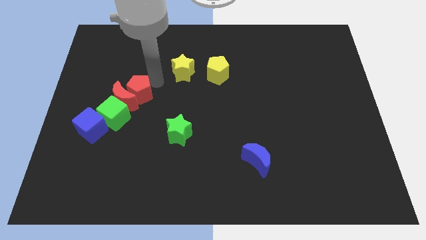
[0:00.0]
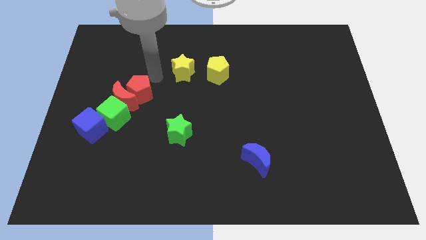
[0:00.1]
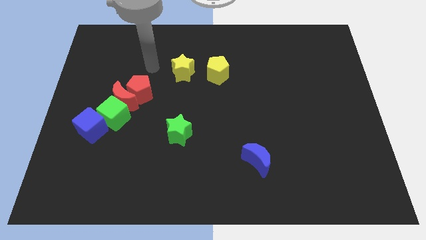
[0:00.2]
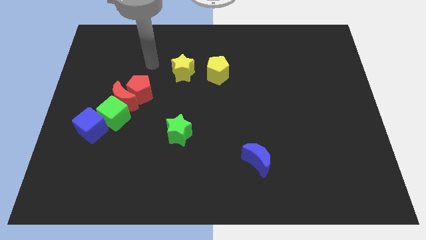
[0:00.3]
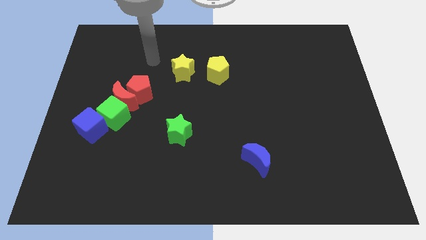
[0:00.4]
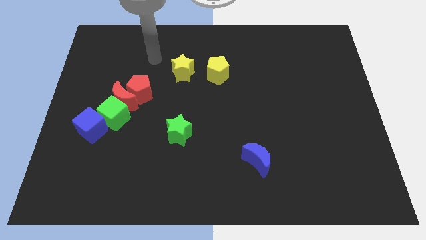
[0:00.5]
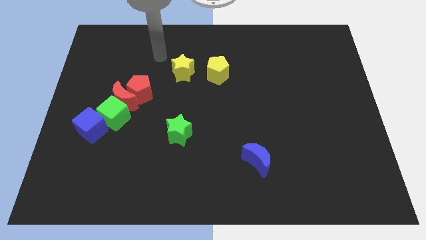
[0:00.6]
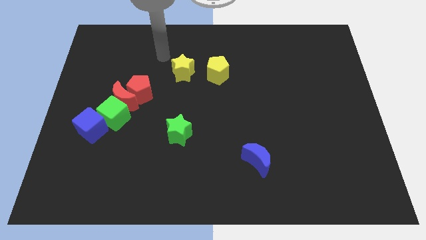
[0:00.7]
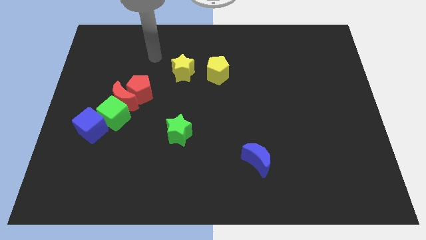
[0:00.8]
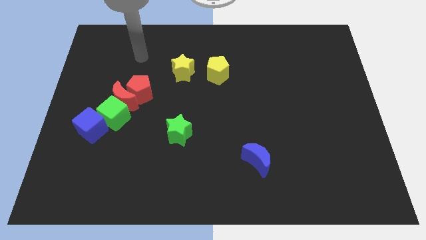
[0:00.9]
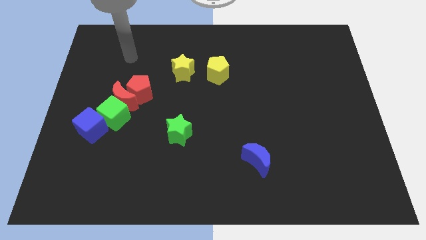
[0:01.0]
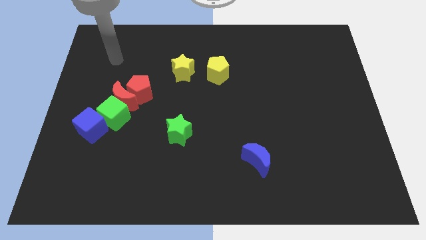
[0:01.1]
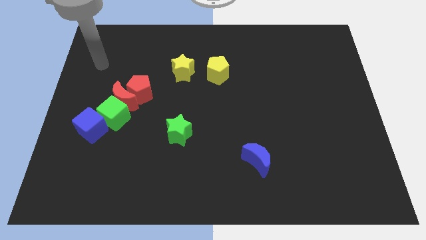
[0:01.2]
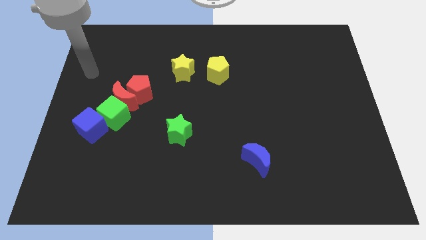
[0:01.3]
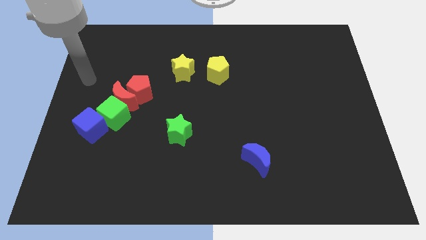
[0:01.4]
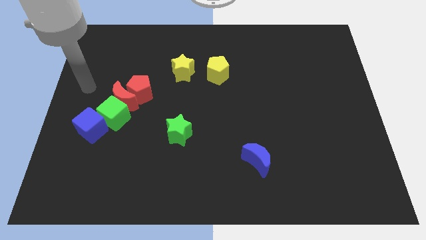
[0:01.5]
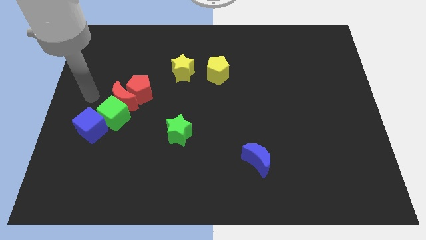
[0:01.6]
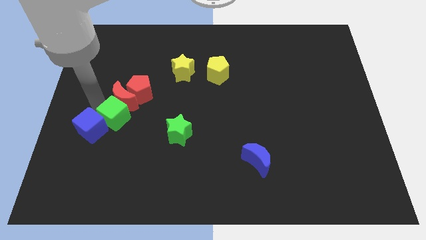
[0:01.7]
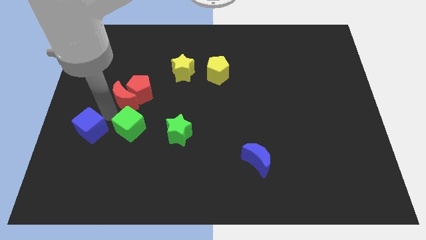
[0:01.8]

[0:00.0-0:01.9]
move the green cube to the bottom of the red crescent

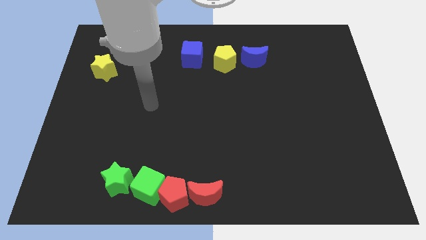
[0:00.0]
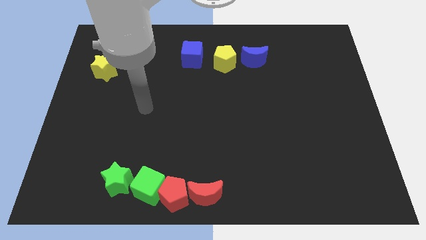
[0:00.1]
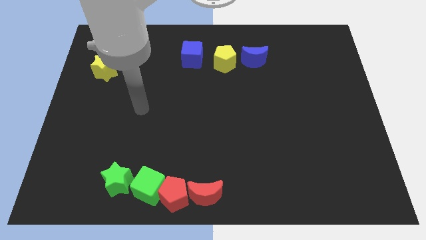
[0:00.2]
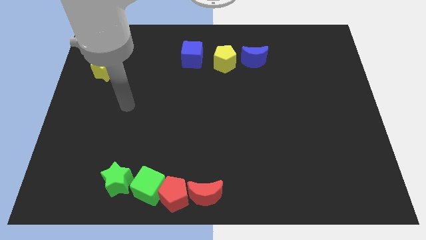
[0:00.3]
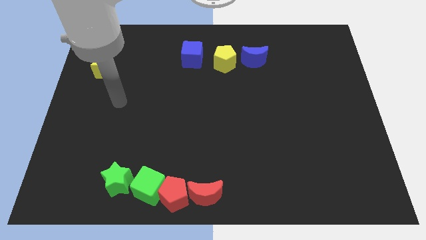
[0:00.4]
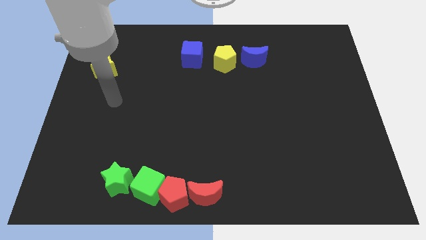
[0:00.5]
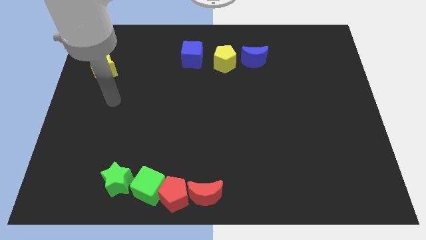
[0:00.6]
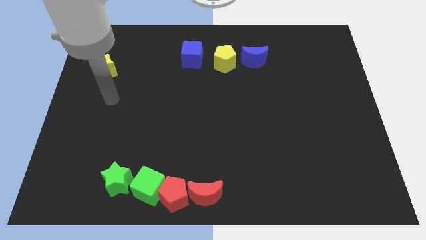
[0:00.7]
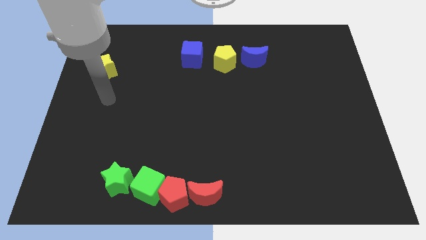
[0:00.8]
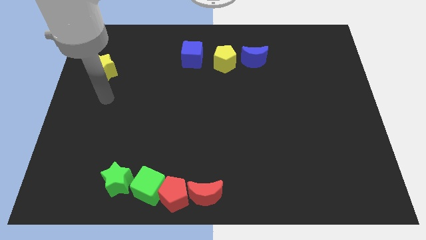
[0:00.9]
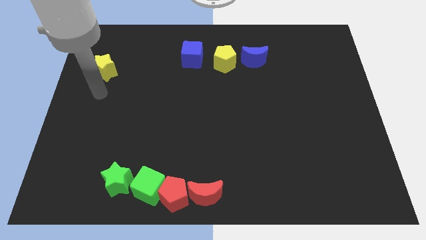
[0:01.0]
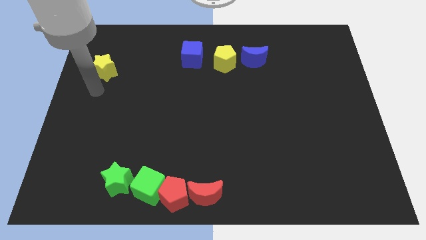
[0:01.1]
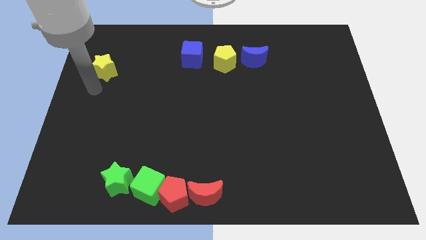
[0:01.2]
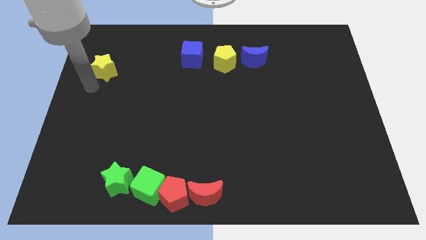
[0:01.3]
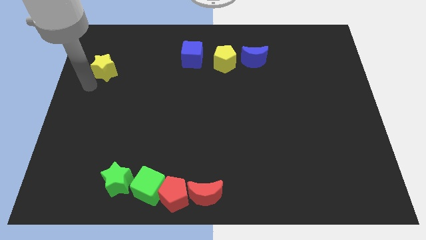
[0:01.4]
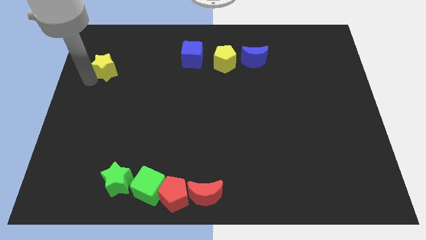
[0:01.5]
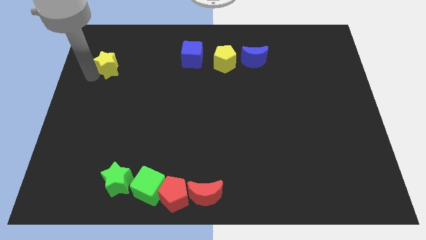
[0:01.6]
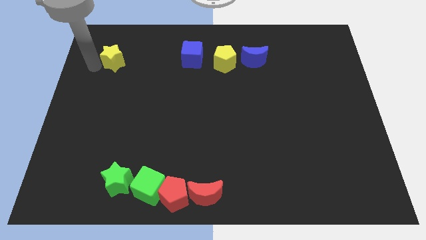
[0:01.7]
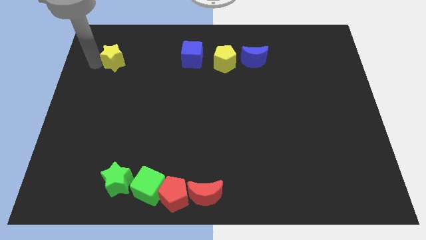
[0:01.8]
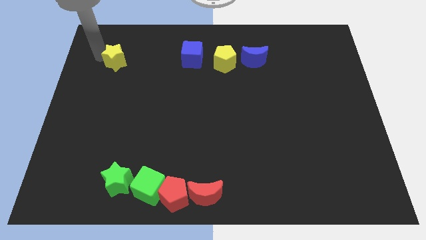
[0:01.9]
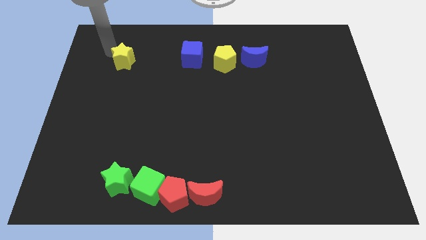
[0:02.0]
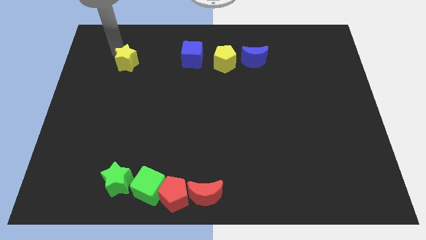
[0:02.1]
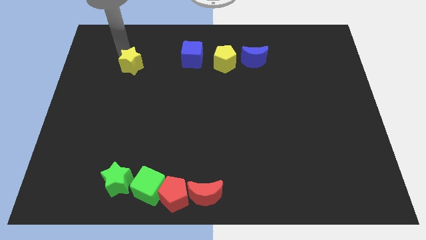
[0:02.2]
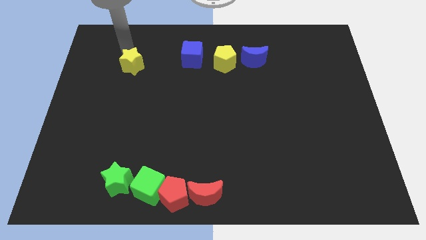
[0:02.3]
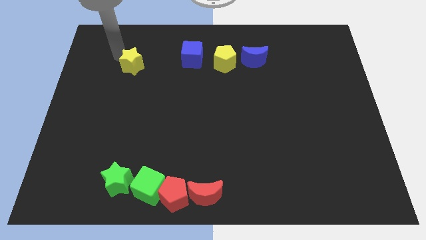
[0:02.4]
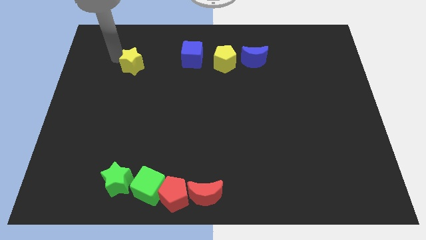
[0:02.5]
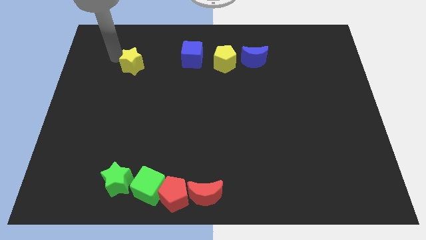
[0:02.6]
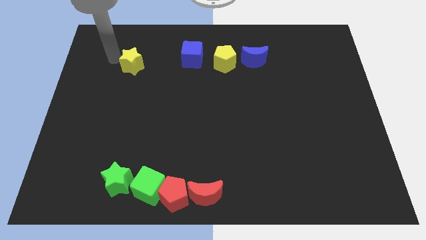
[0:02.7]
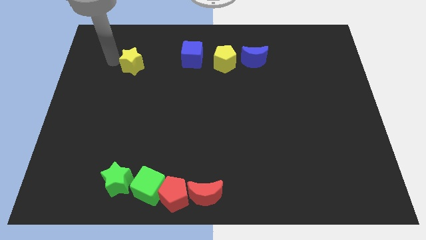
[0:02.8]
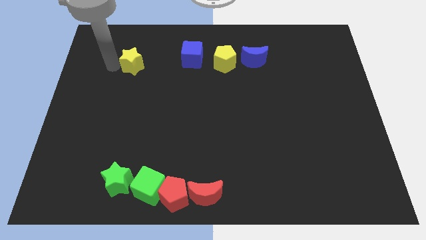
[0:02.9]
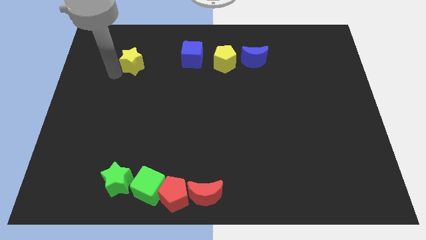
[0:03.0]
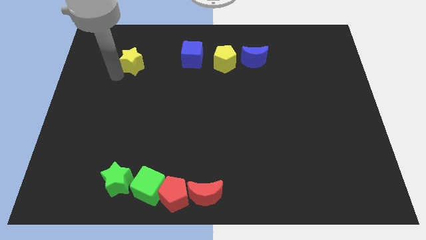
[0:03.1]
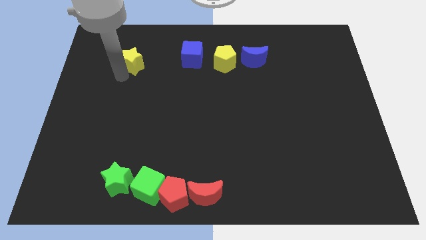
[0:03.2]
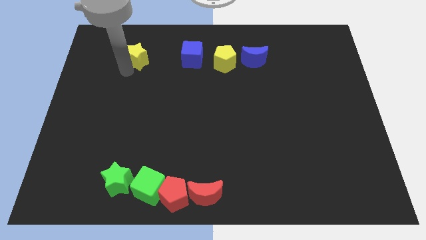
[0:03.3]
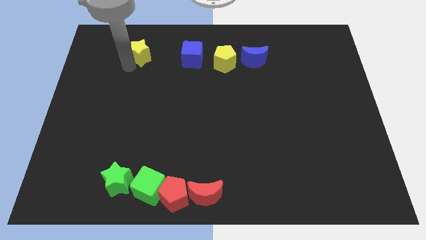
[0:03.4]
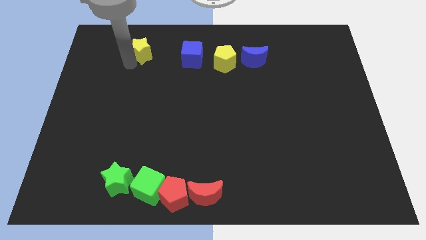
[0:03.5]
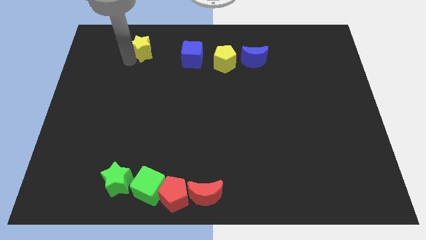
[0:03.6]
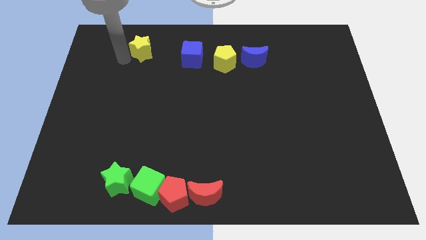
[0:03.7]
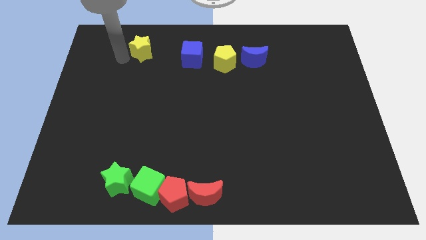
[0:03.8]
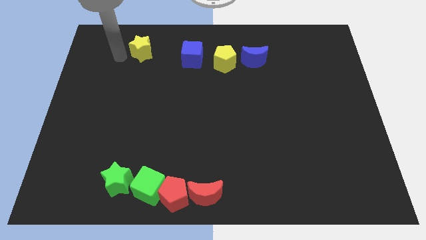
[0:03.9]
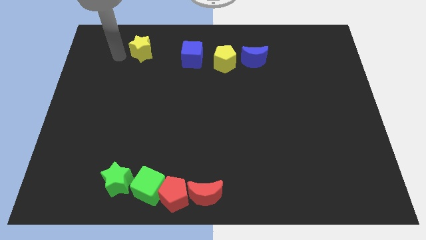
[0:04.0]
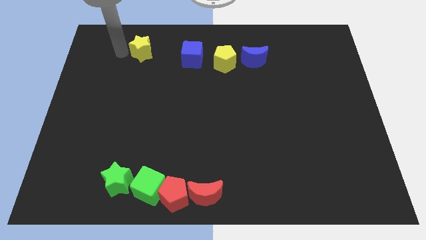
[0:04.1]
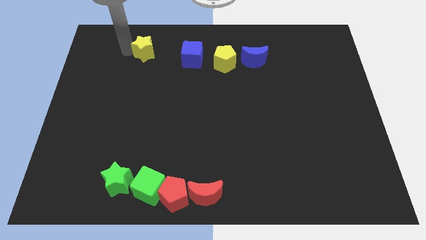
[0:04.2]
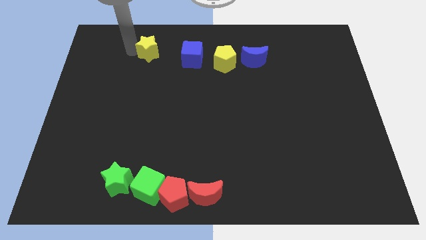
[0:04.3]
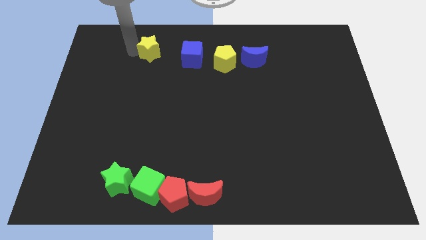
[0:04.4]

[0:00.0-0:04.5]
place the yellow star to the left of the blue cube

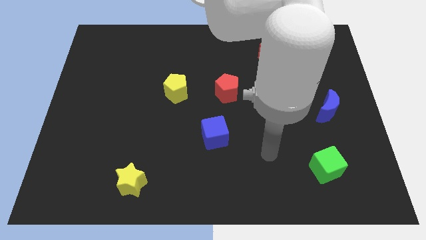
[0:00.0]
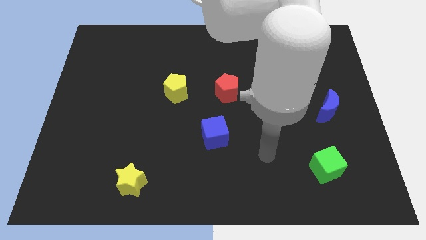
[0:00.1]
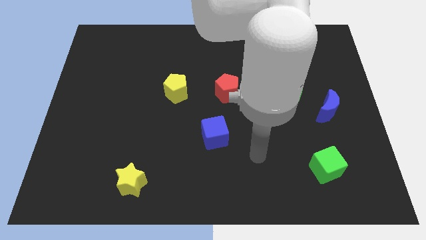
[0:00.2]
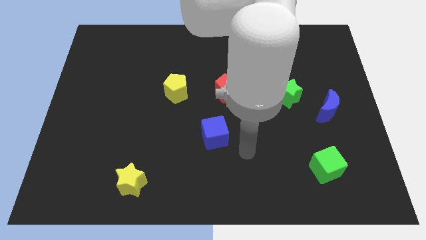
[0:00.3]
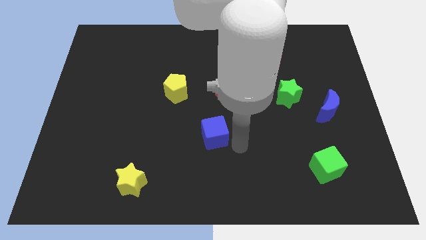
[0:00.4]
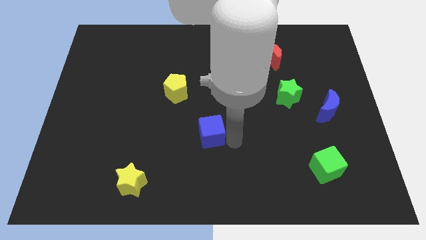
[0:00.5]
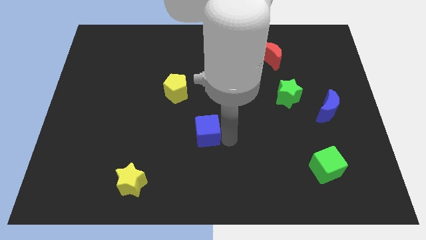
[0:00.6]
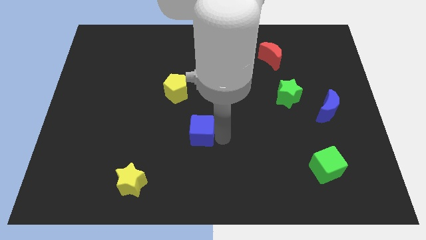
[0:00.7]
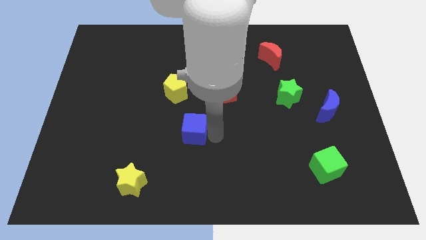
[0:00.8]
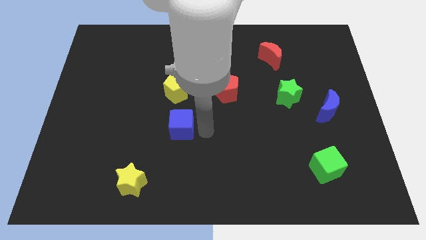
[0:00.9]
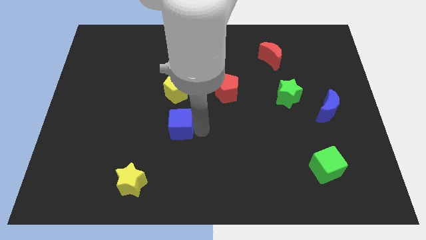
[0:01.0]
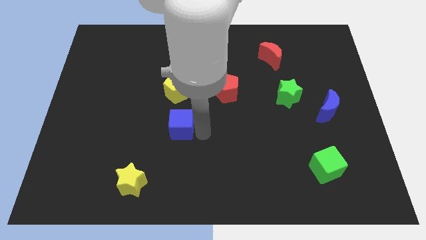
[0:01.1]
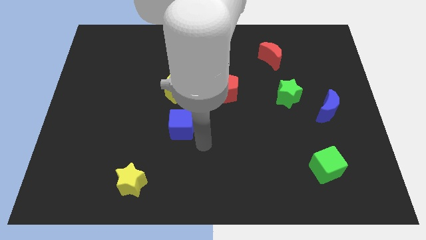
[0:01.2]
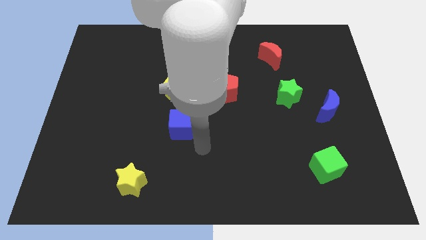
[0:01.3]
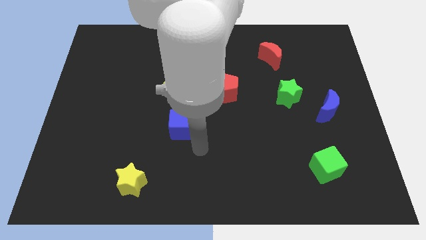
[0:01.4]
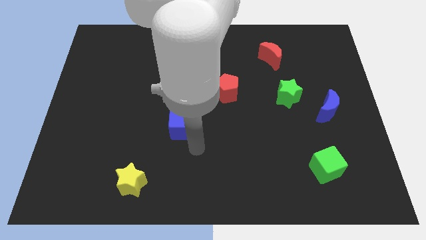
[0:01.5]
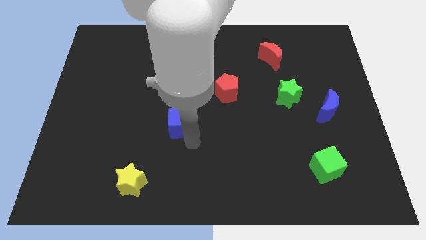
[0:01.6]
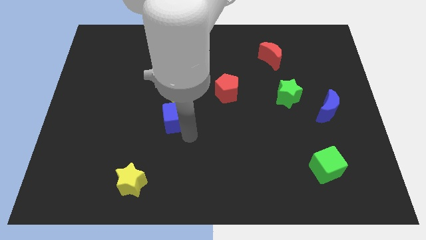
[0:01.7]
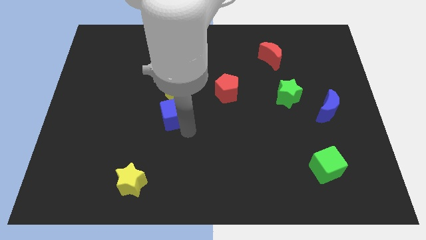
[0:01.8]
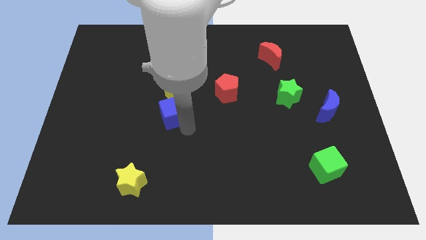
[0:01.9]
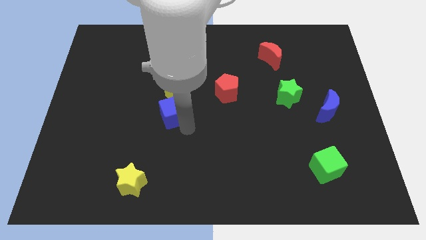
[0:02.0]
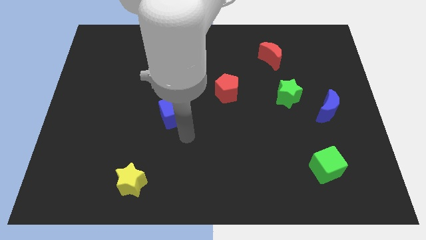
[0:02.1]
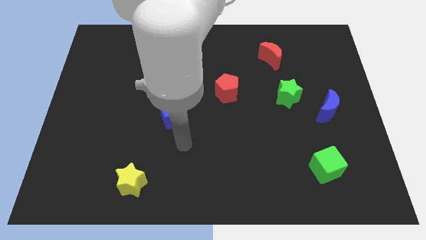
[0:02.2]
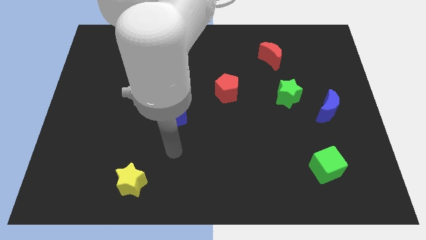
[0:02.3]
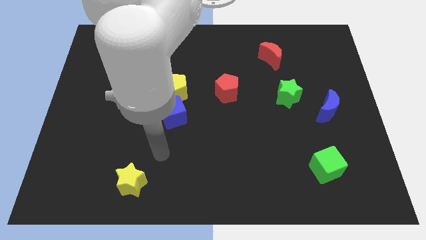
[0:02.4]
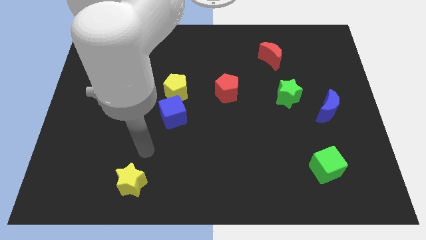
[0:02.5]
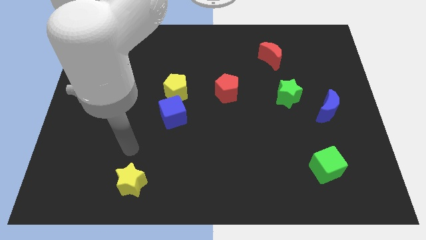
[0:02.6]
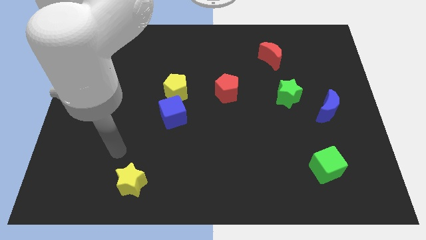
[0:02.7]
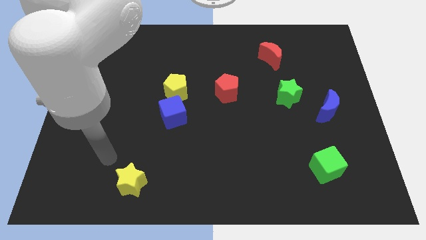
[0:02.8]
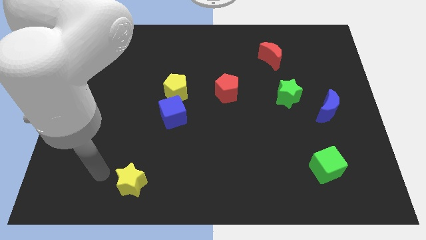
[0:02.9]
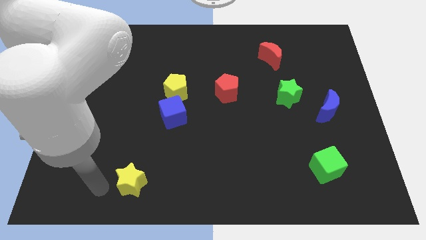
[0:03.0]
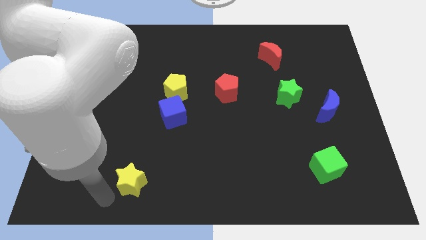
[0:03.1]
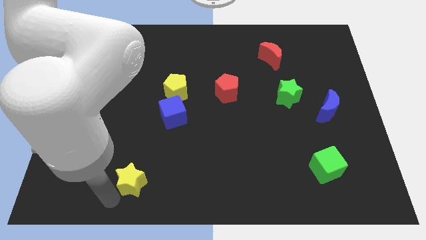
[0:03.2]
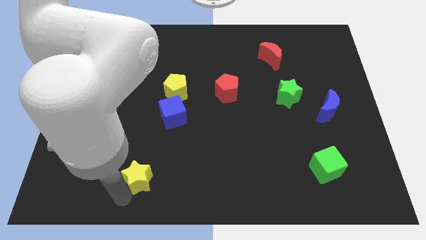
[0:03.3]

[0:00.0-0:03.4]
push the blue cube into the yellow pentagon
